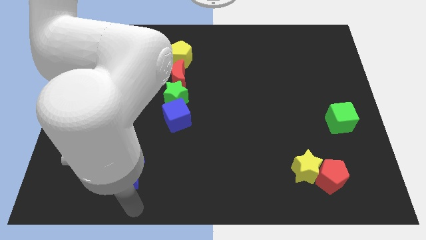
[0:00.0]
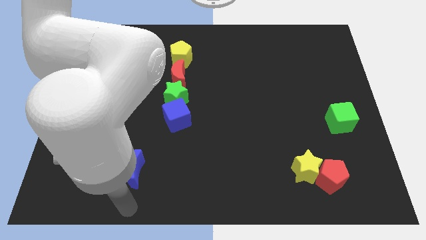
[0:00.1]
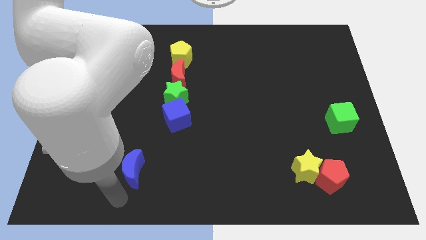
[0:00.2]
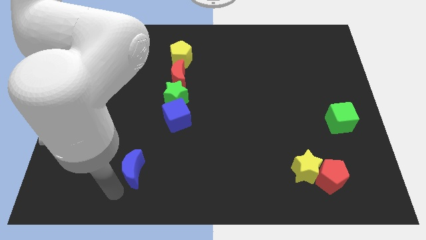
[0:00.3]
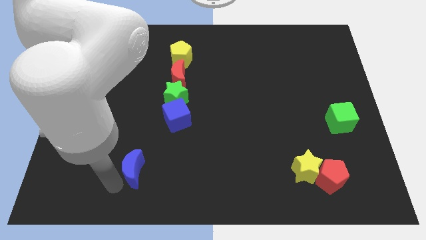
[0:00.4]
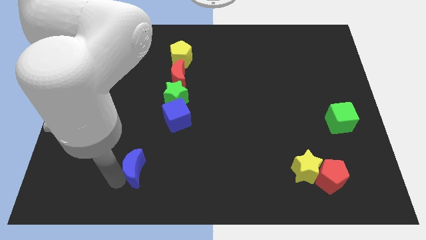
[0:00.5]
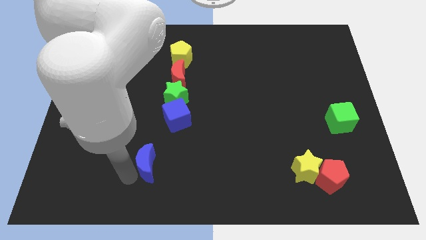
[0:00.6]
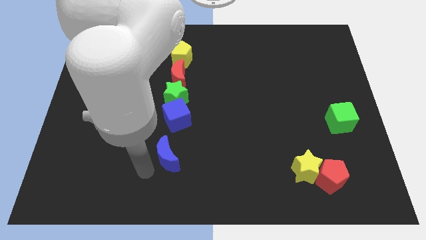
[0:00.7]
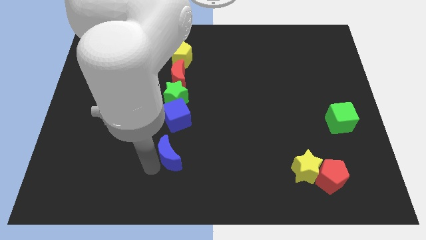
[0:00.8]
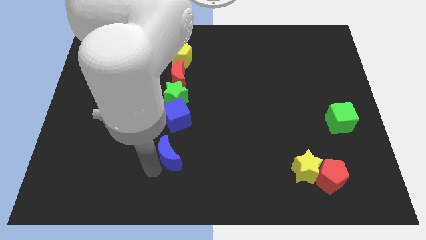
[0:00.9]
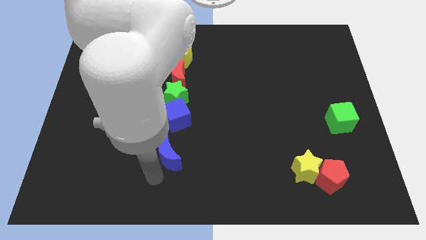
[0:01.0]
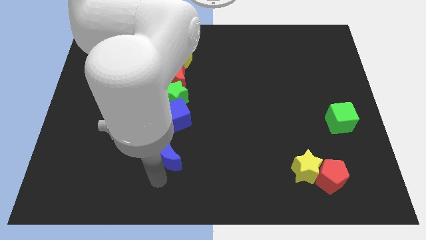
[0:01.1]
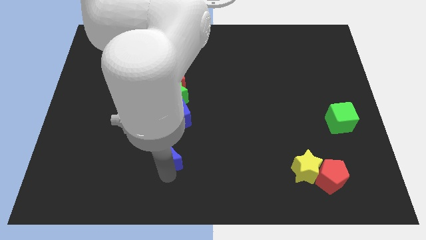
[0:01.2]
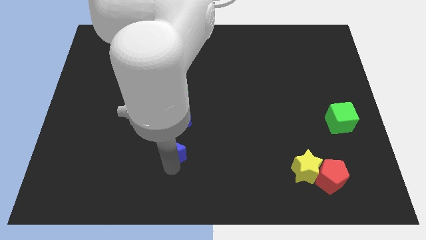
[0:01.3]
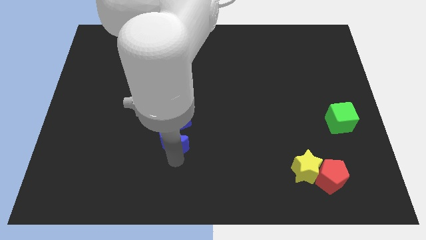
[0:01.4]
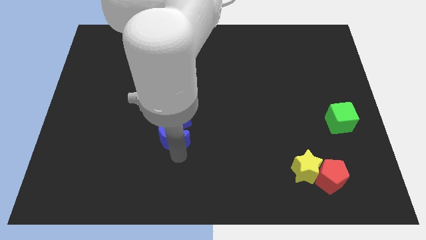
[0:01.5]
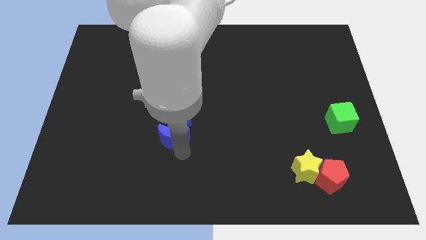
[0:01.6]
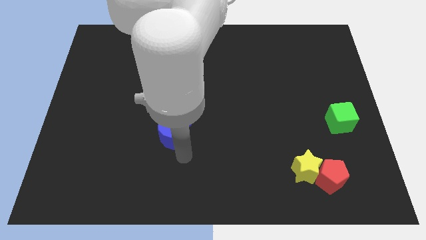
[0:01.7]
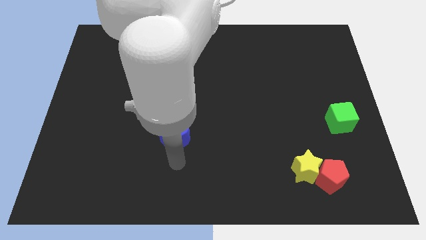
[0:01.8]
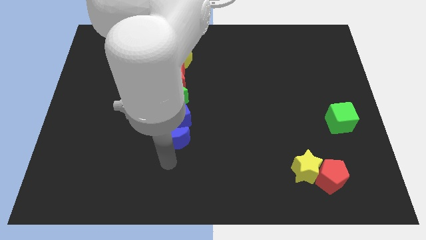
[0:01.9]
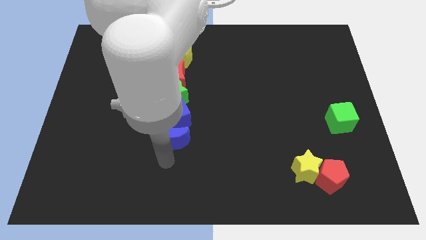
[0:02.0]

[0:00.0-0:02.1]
place the blue moon below the blue cube

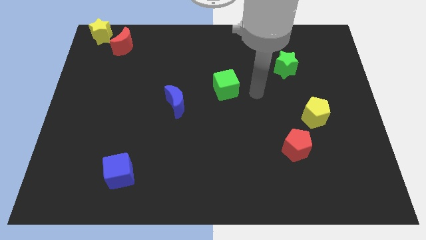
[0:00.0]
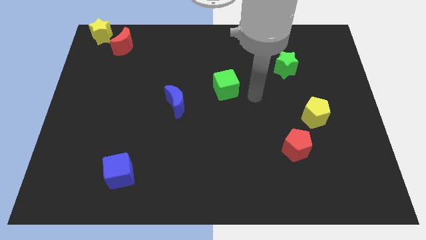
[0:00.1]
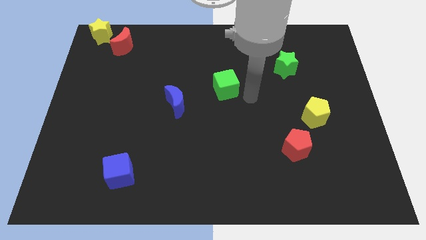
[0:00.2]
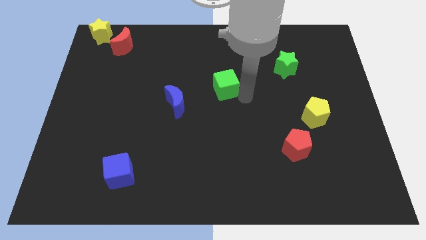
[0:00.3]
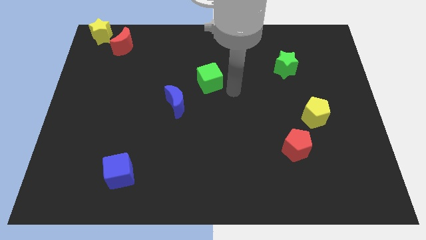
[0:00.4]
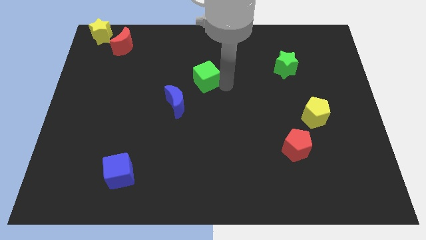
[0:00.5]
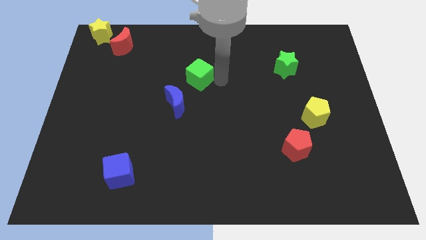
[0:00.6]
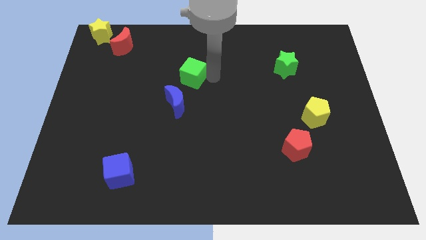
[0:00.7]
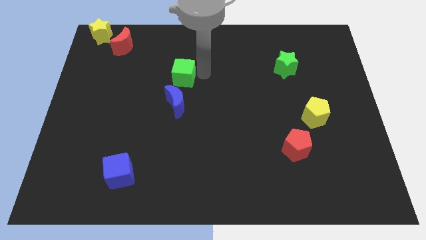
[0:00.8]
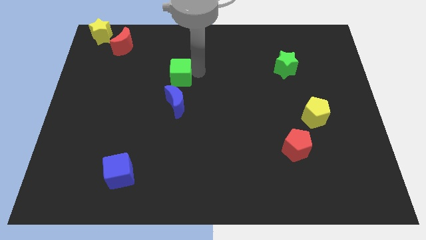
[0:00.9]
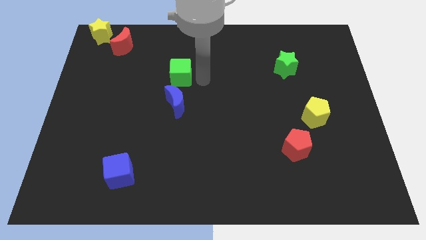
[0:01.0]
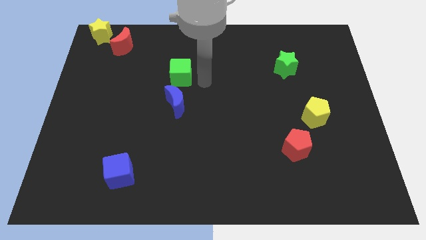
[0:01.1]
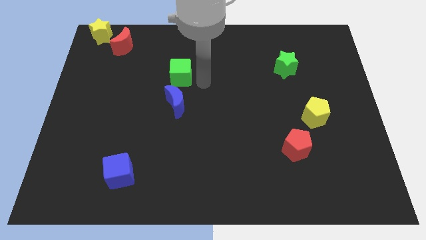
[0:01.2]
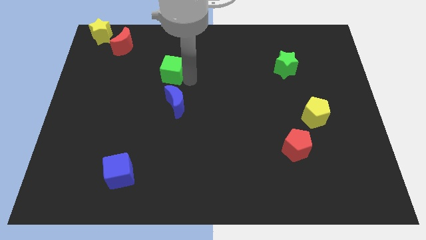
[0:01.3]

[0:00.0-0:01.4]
place the green cube above the blue moon

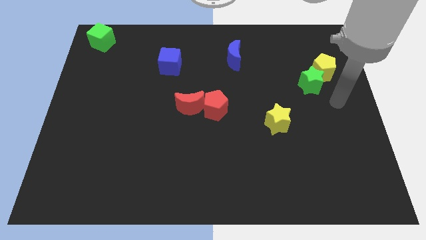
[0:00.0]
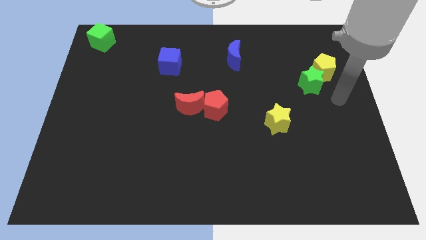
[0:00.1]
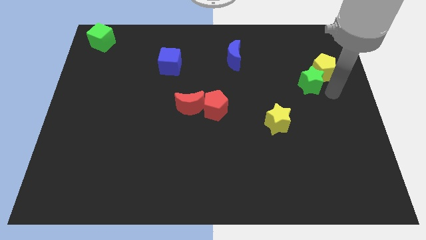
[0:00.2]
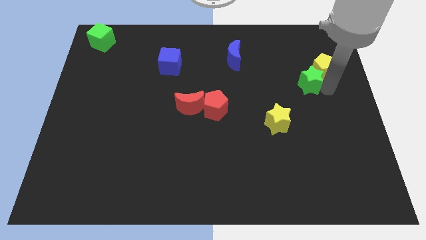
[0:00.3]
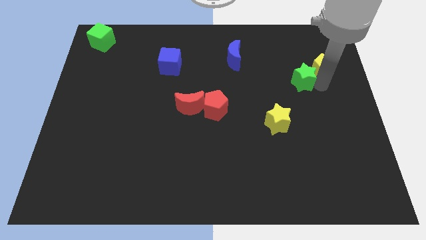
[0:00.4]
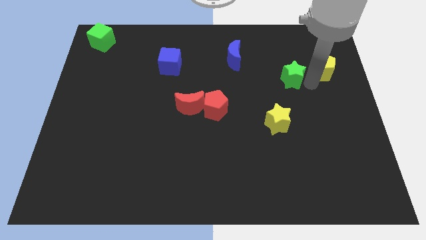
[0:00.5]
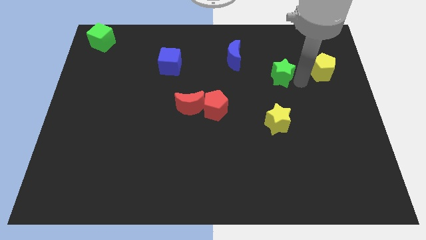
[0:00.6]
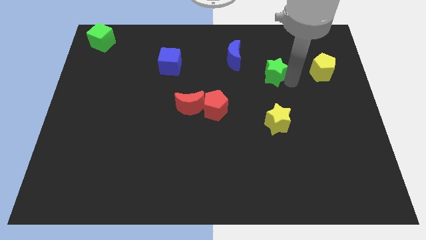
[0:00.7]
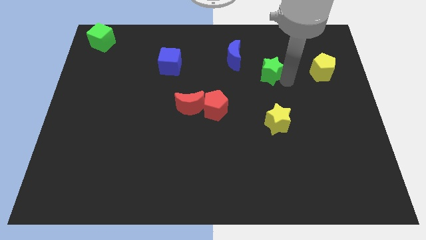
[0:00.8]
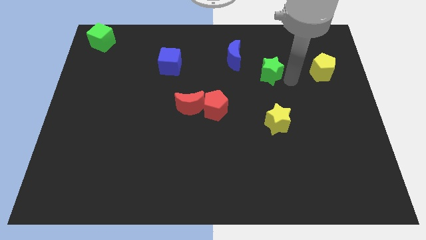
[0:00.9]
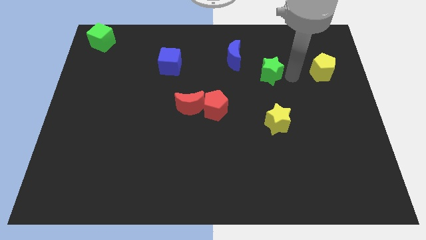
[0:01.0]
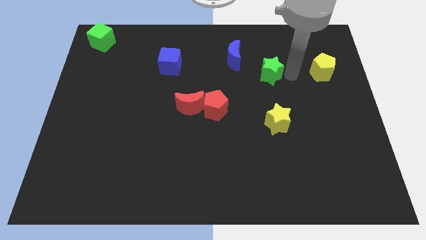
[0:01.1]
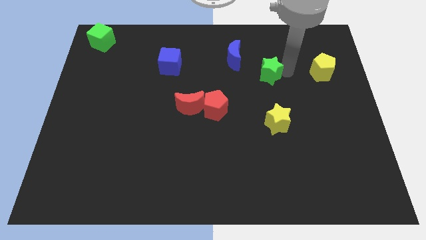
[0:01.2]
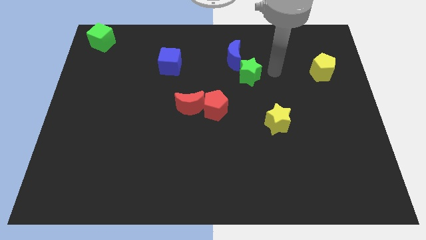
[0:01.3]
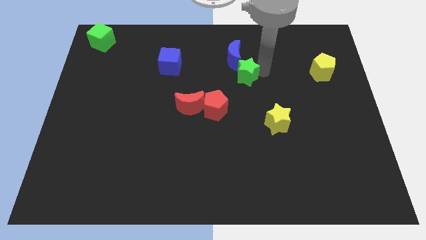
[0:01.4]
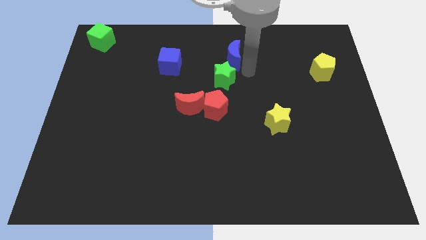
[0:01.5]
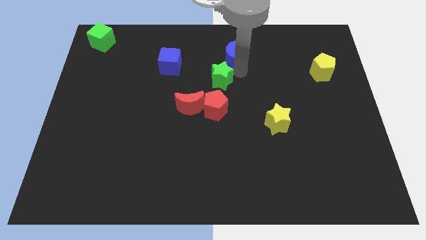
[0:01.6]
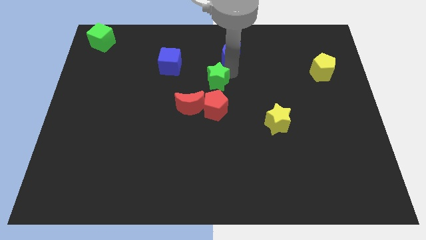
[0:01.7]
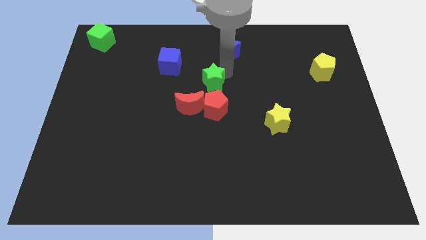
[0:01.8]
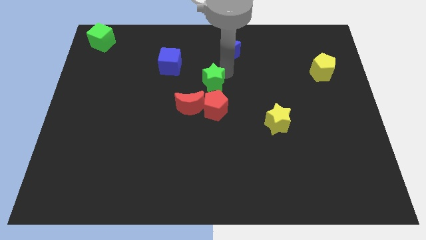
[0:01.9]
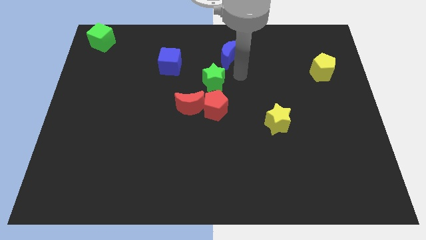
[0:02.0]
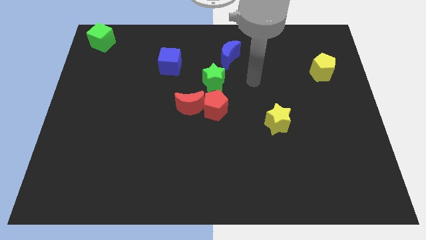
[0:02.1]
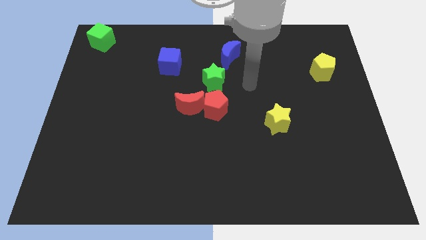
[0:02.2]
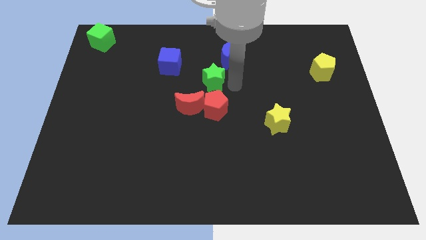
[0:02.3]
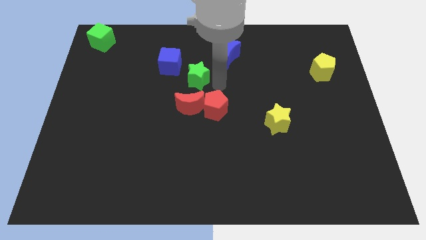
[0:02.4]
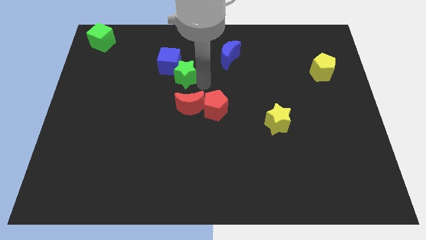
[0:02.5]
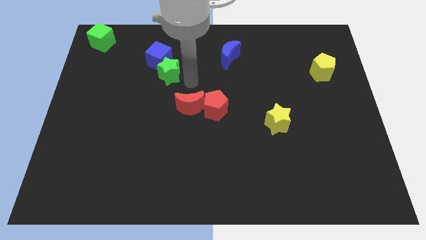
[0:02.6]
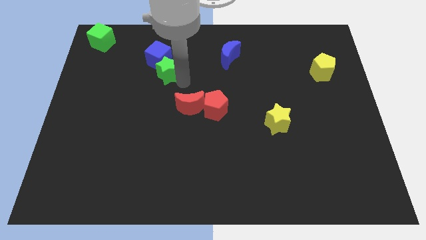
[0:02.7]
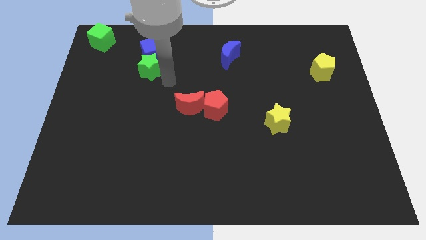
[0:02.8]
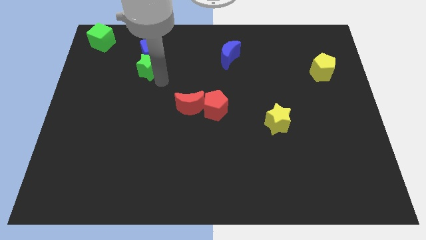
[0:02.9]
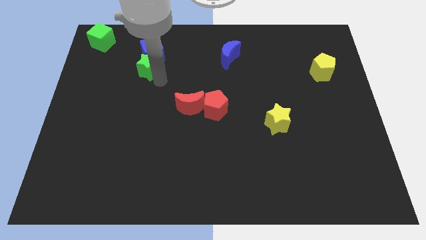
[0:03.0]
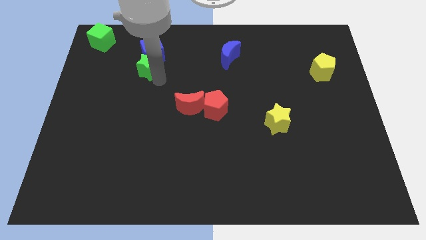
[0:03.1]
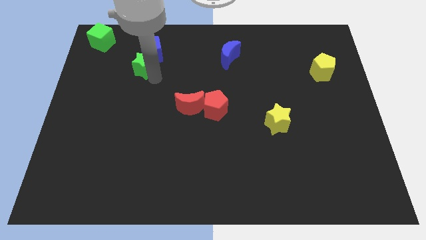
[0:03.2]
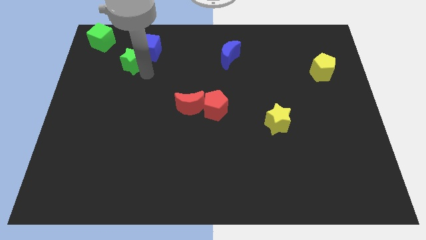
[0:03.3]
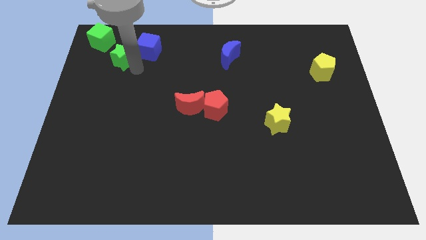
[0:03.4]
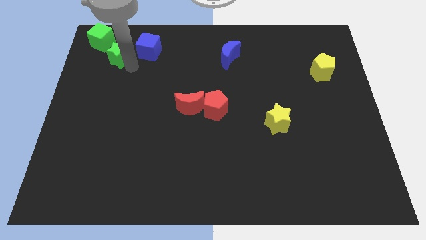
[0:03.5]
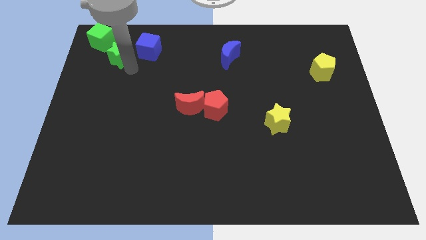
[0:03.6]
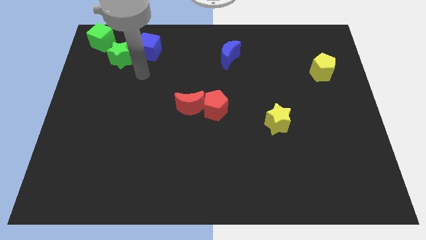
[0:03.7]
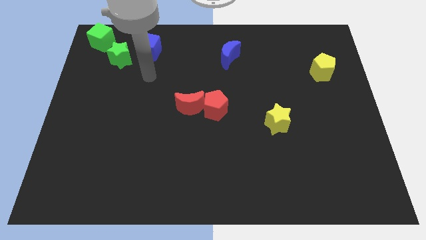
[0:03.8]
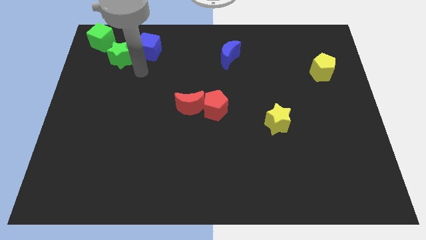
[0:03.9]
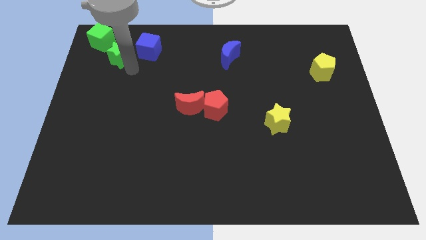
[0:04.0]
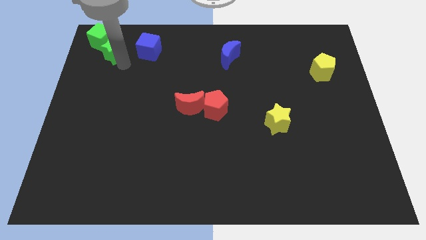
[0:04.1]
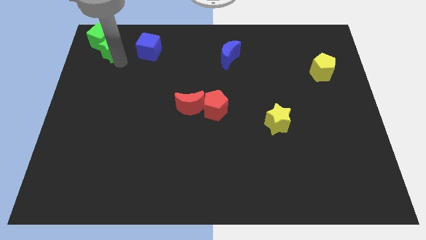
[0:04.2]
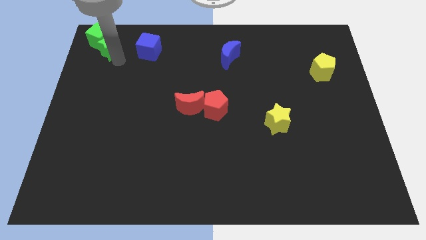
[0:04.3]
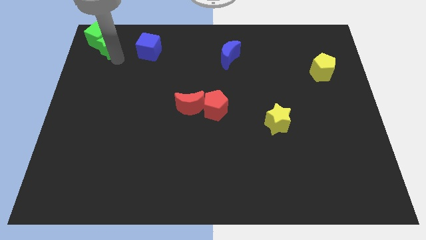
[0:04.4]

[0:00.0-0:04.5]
group up the green blocks at the top left corner of the board

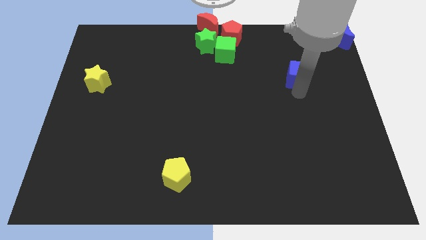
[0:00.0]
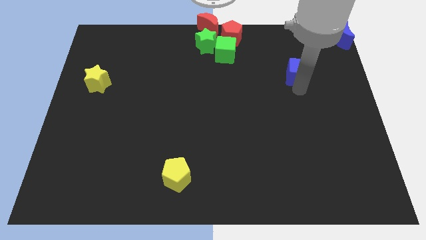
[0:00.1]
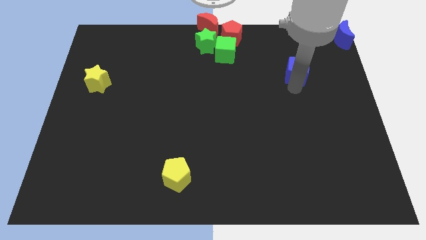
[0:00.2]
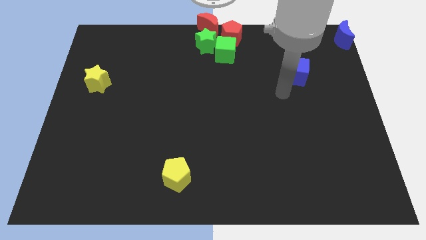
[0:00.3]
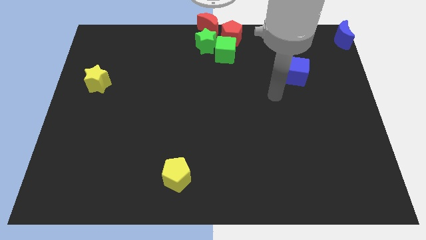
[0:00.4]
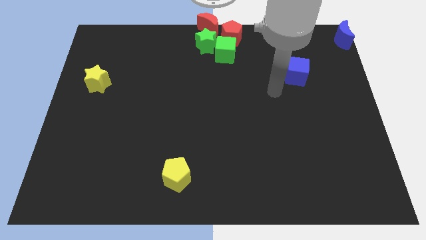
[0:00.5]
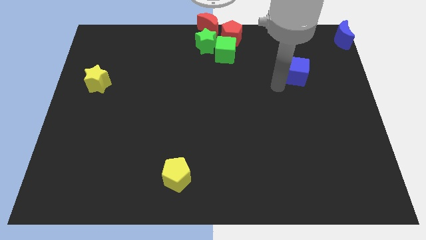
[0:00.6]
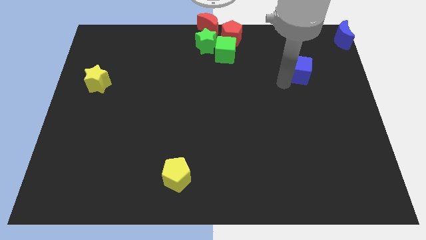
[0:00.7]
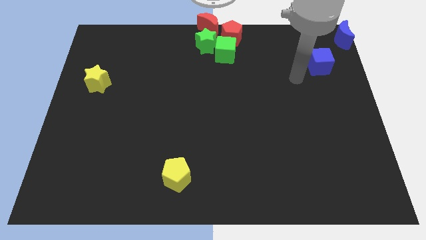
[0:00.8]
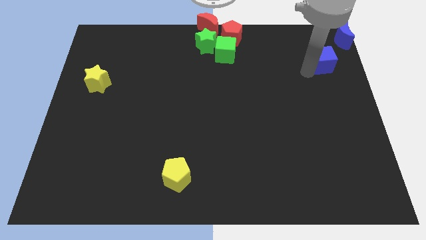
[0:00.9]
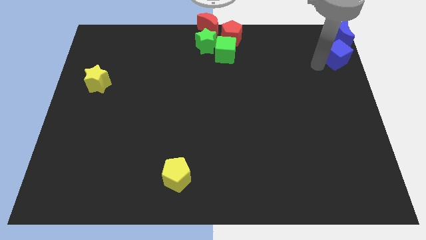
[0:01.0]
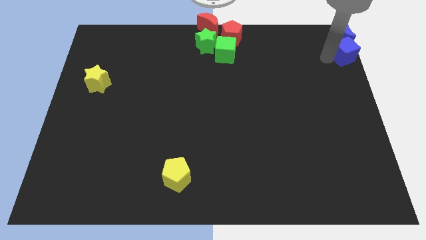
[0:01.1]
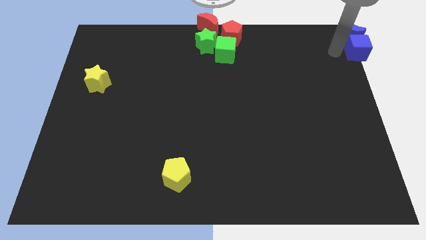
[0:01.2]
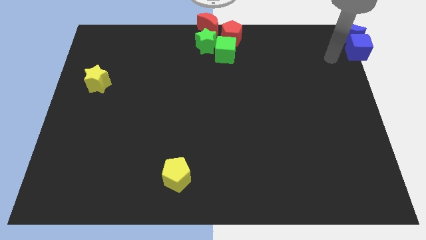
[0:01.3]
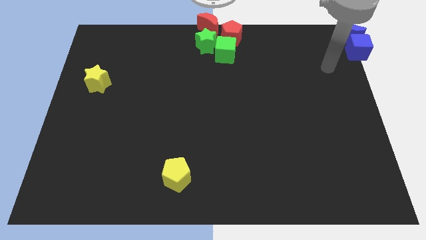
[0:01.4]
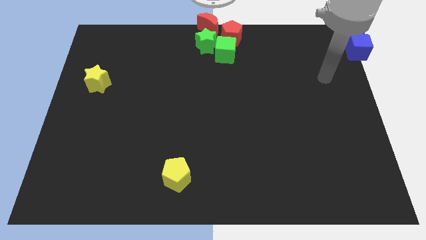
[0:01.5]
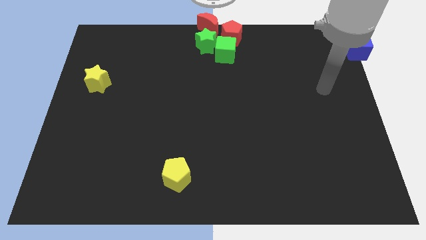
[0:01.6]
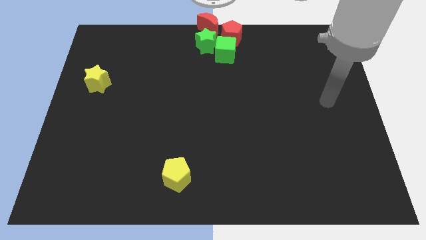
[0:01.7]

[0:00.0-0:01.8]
push the blue cube to the top right corner under the blue crescent
